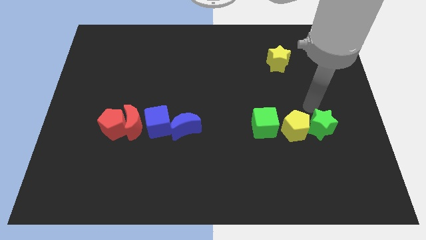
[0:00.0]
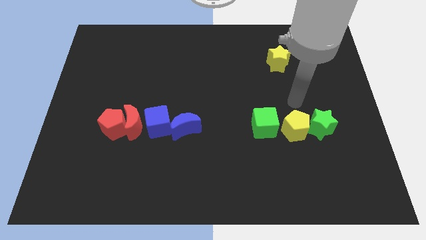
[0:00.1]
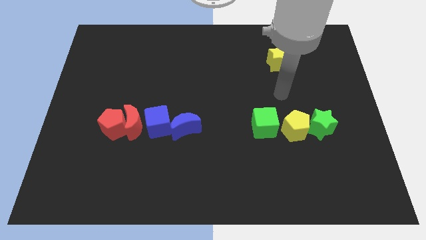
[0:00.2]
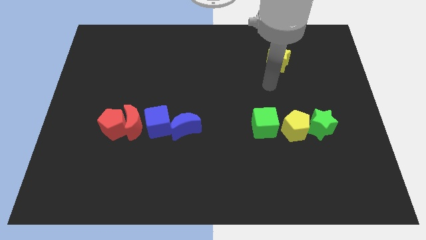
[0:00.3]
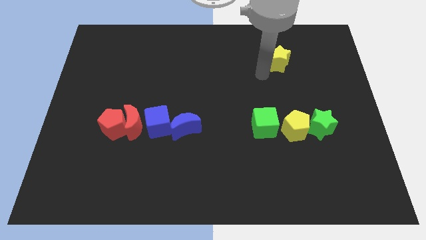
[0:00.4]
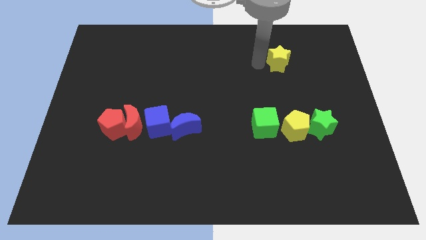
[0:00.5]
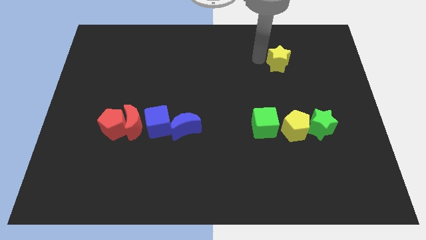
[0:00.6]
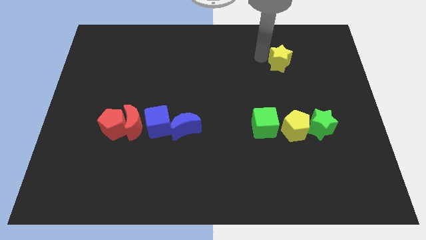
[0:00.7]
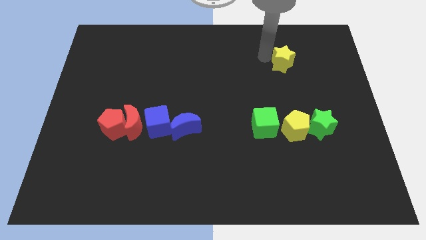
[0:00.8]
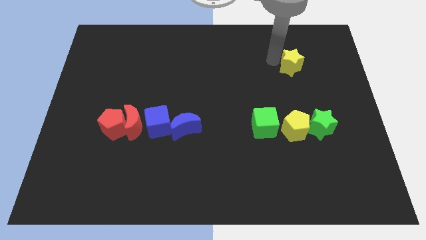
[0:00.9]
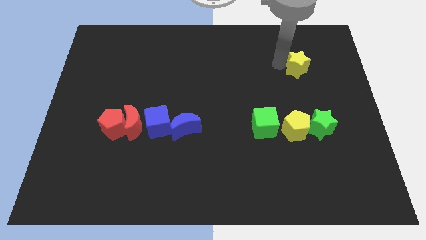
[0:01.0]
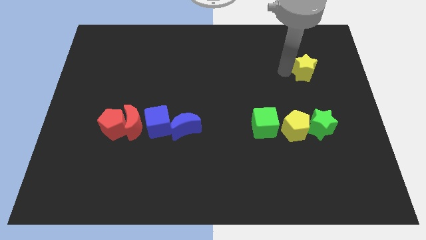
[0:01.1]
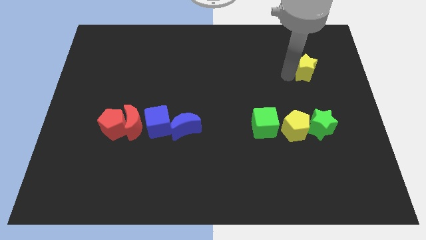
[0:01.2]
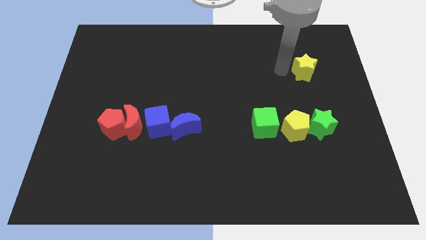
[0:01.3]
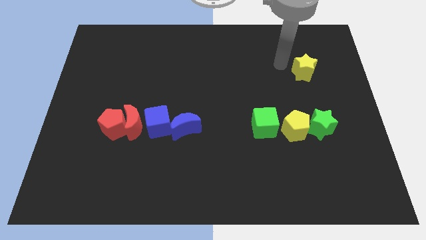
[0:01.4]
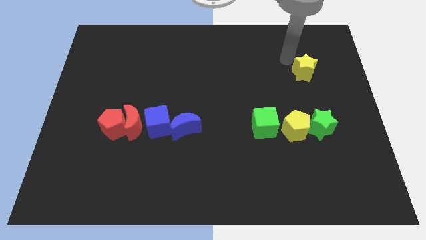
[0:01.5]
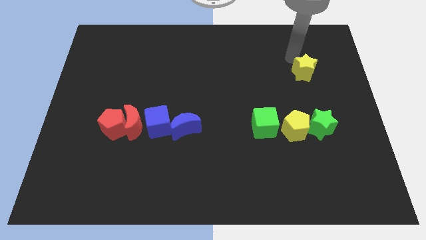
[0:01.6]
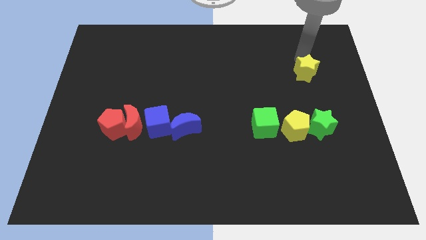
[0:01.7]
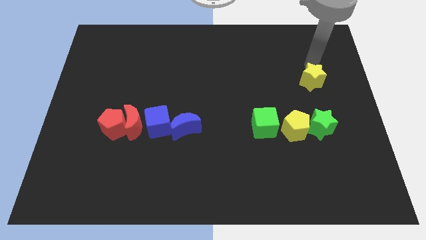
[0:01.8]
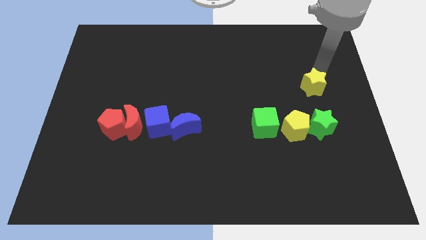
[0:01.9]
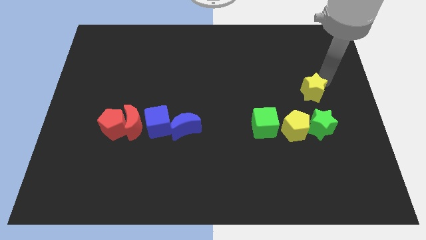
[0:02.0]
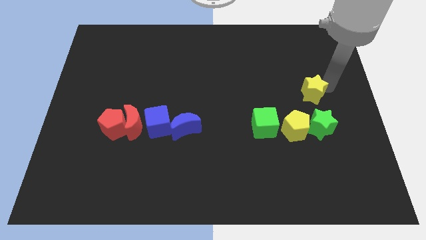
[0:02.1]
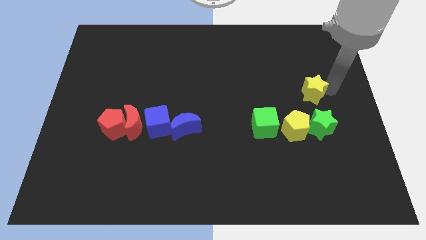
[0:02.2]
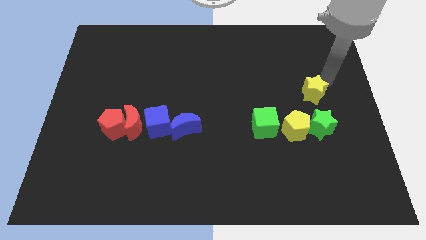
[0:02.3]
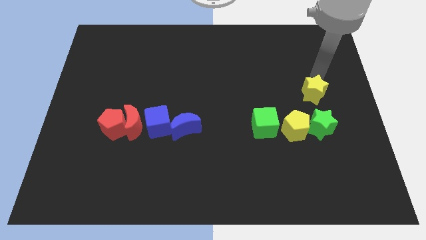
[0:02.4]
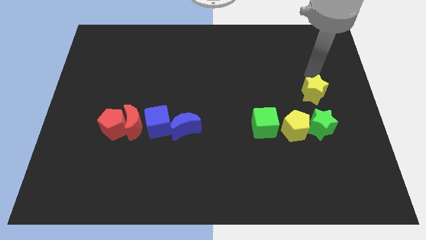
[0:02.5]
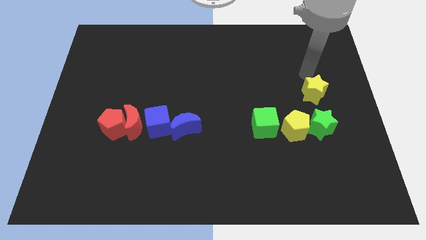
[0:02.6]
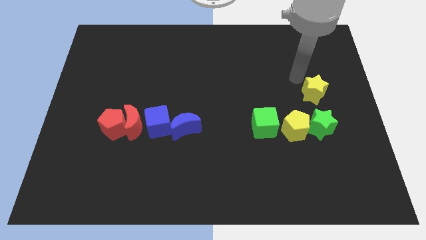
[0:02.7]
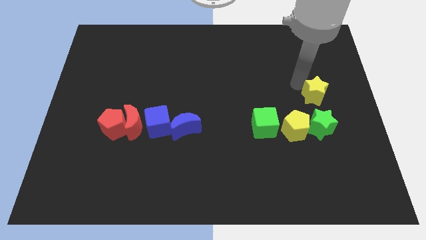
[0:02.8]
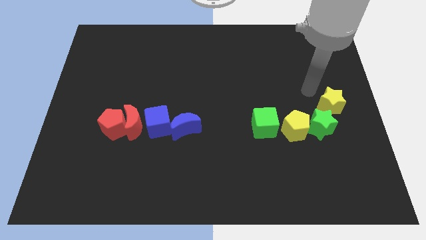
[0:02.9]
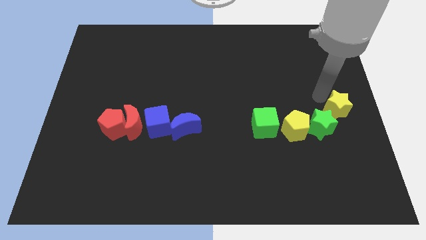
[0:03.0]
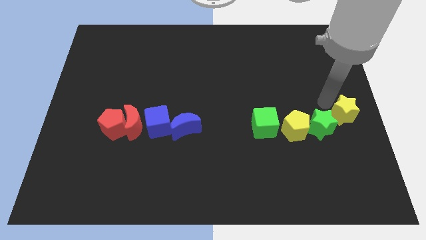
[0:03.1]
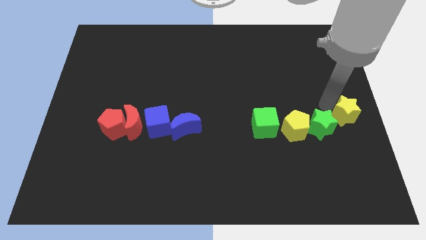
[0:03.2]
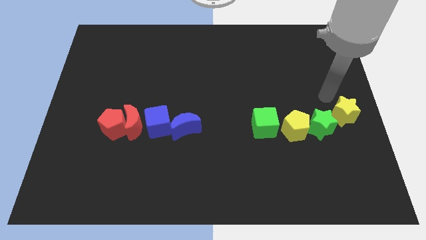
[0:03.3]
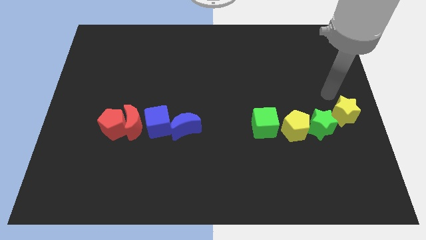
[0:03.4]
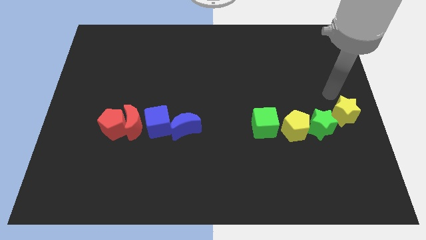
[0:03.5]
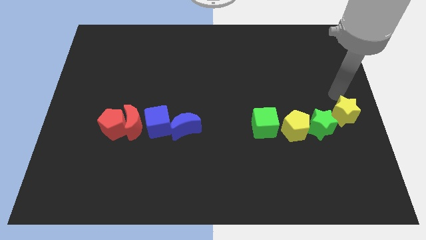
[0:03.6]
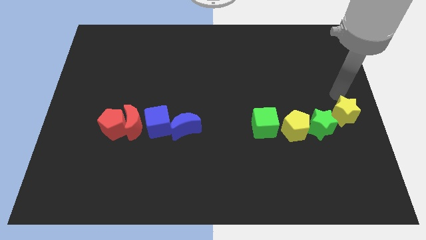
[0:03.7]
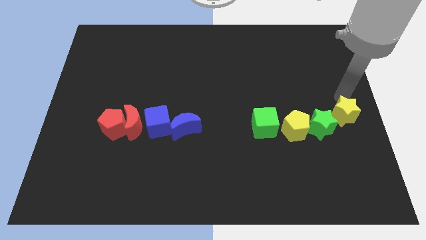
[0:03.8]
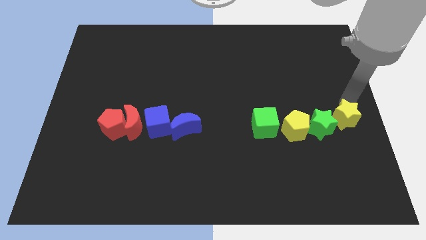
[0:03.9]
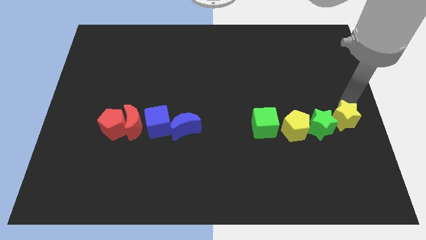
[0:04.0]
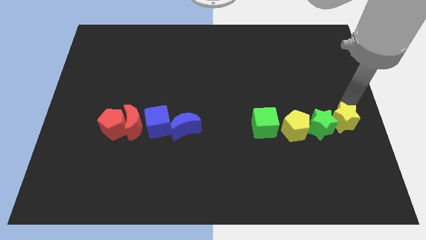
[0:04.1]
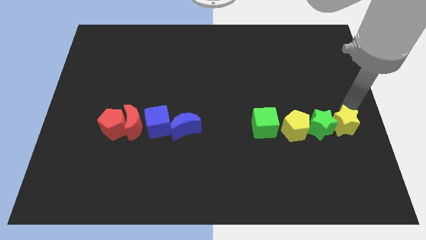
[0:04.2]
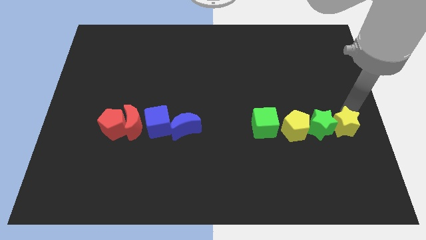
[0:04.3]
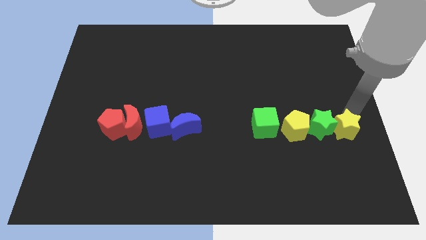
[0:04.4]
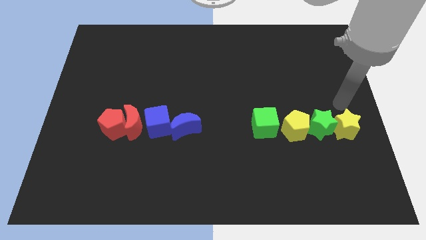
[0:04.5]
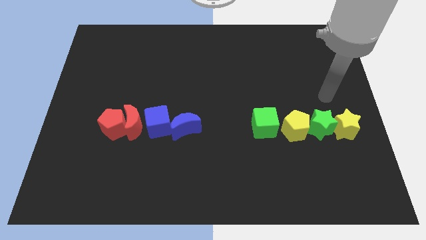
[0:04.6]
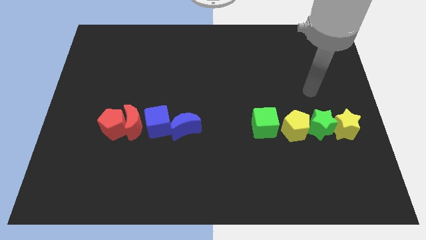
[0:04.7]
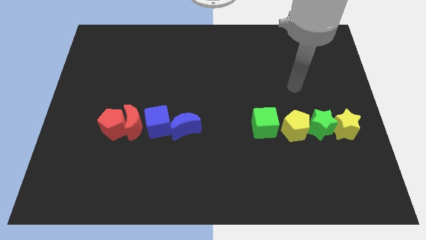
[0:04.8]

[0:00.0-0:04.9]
move the yellow star to the right of the green star

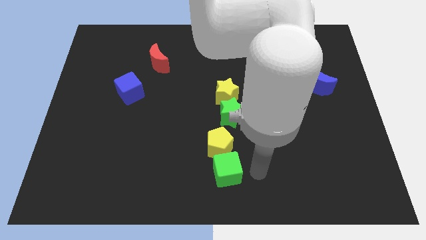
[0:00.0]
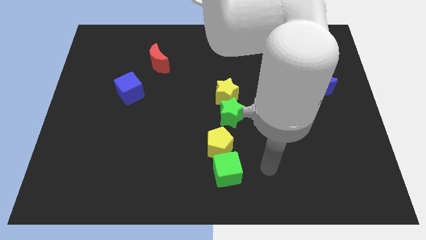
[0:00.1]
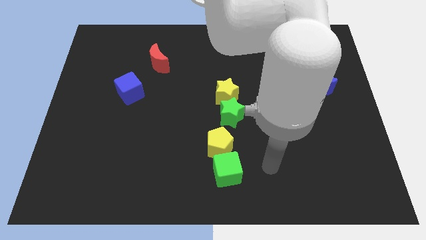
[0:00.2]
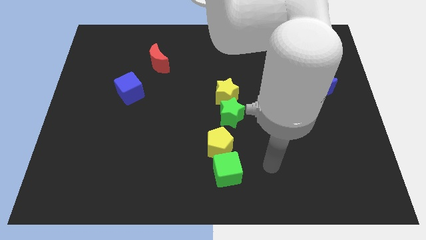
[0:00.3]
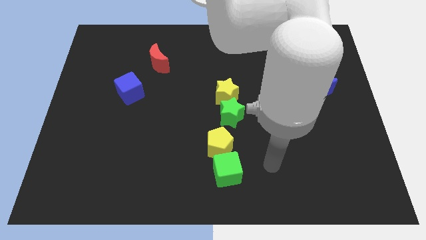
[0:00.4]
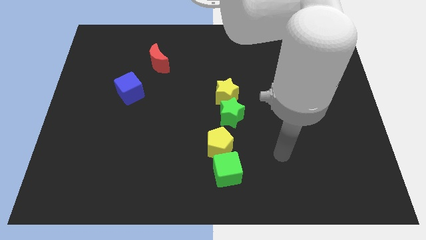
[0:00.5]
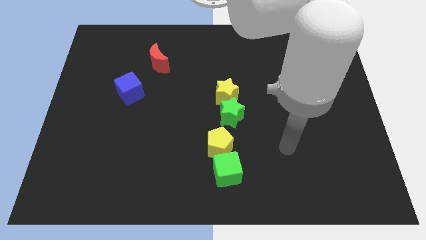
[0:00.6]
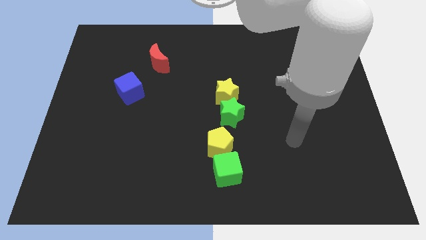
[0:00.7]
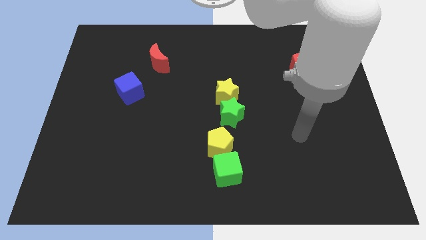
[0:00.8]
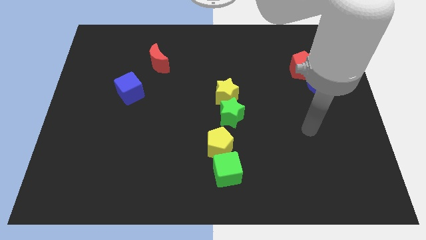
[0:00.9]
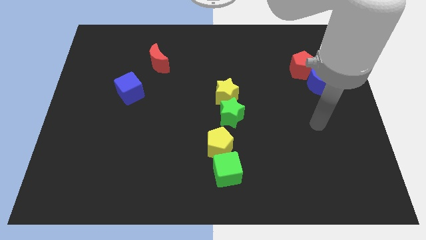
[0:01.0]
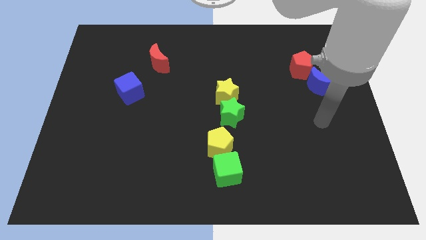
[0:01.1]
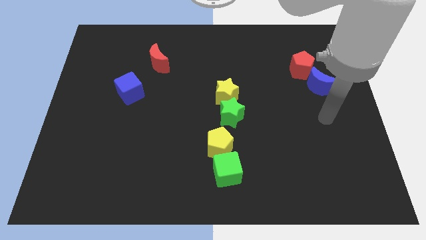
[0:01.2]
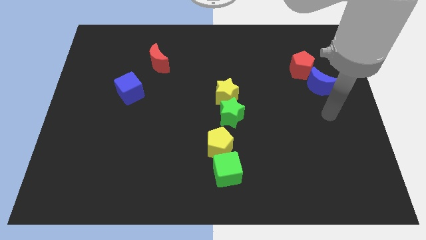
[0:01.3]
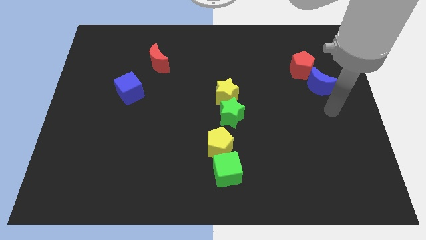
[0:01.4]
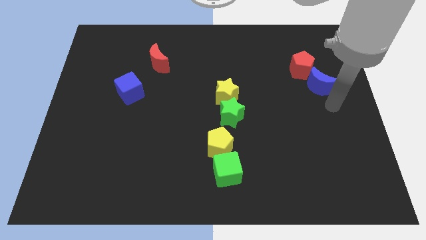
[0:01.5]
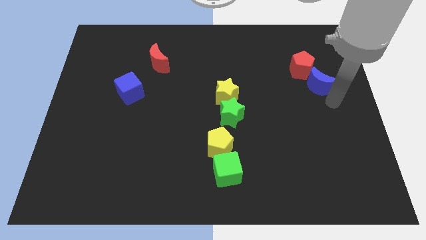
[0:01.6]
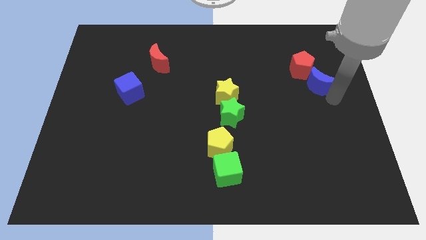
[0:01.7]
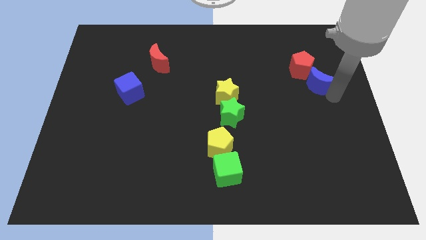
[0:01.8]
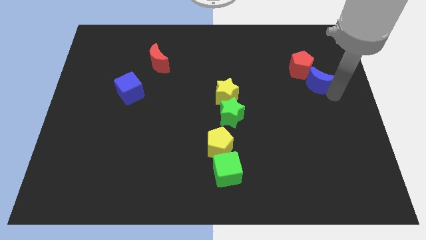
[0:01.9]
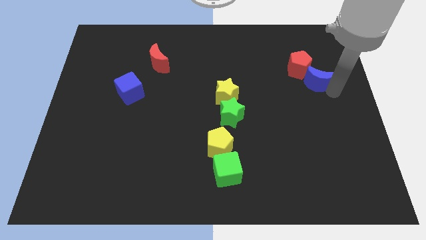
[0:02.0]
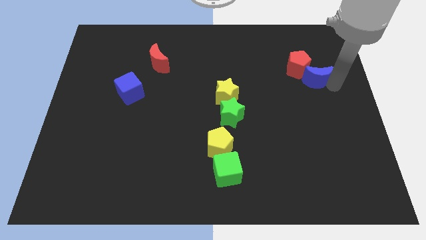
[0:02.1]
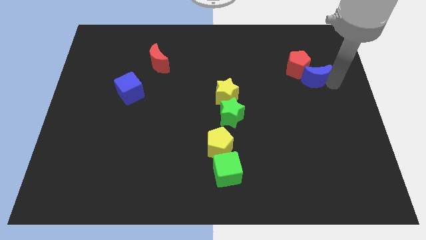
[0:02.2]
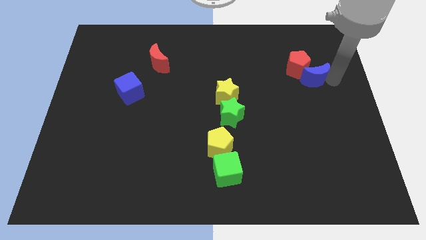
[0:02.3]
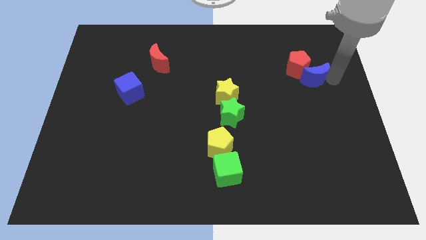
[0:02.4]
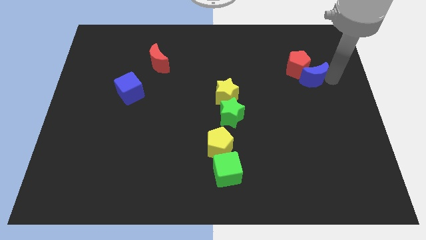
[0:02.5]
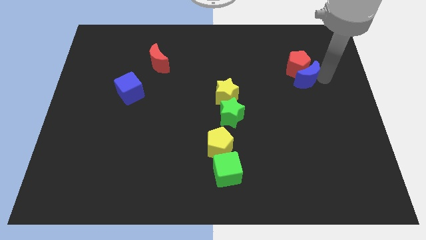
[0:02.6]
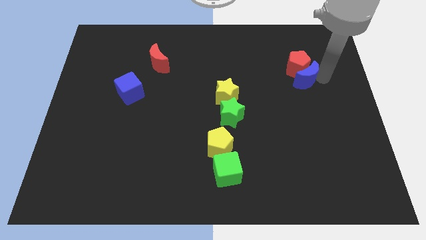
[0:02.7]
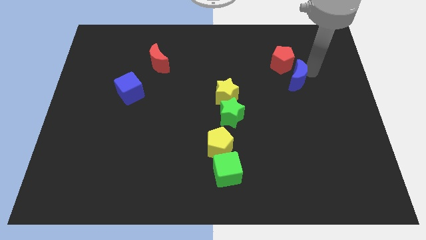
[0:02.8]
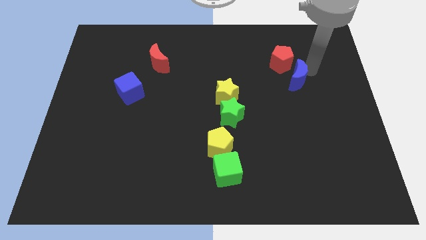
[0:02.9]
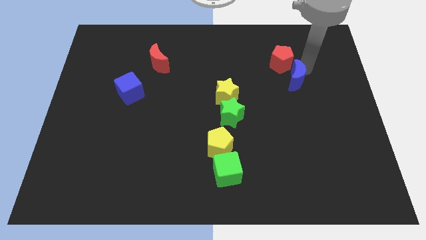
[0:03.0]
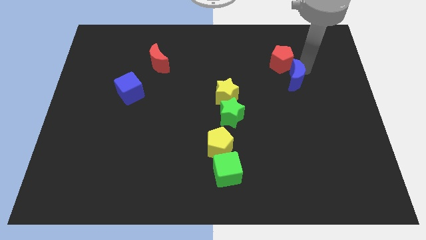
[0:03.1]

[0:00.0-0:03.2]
push the blue moon into the red pentagon

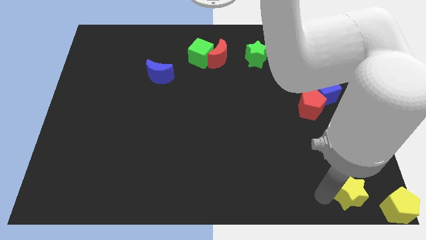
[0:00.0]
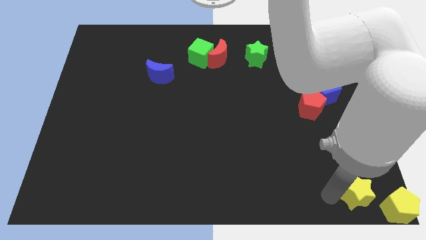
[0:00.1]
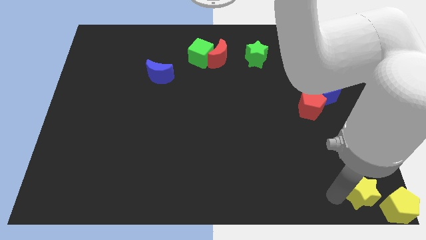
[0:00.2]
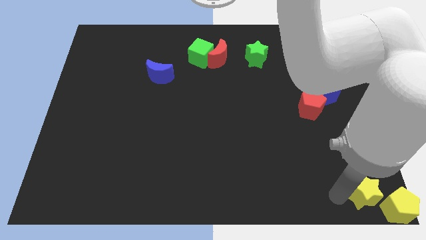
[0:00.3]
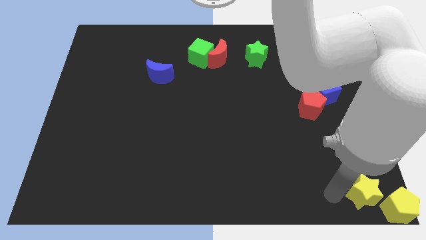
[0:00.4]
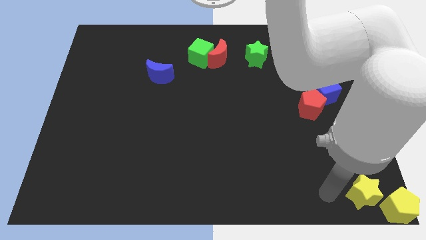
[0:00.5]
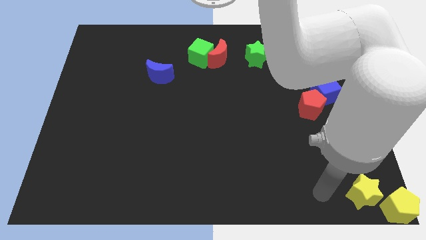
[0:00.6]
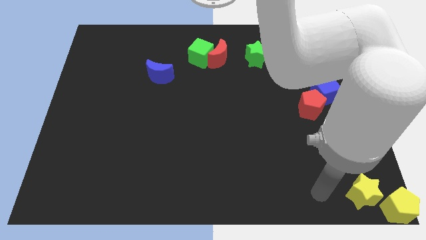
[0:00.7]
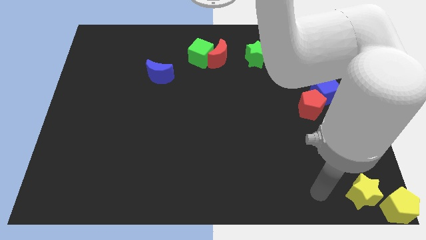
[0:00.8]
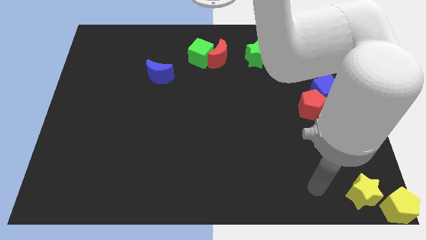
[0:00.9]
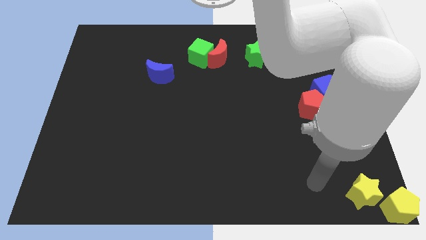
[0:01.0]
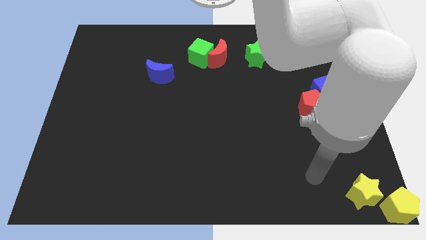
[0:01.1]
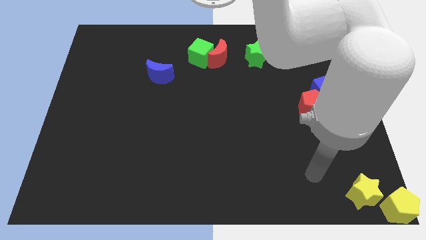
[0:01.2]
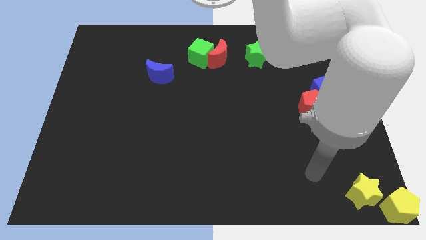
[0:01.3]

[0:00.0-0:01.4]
move the yellow star to the bottom right corner
